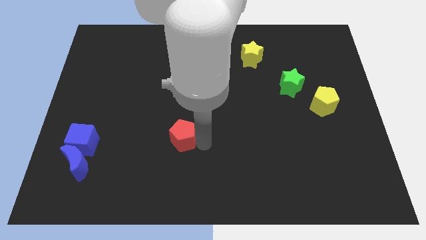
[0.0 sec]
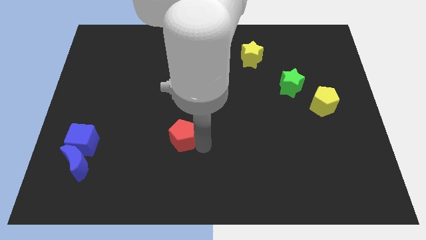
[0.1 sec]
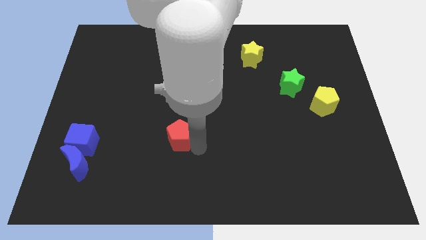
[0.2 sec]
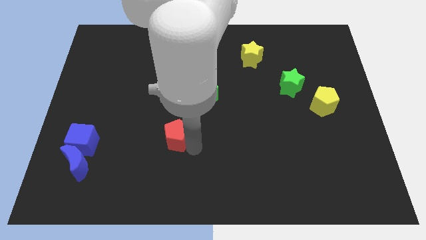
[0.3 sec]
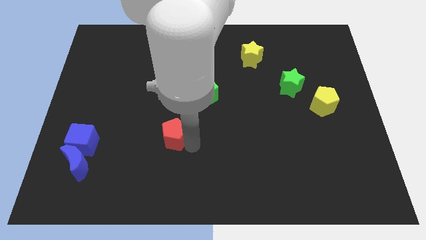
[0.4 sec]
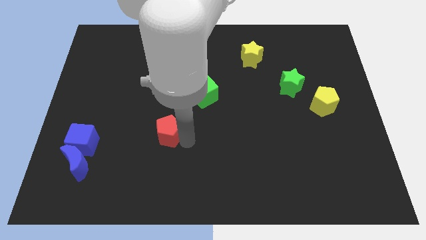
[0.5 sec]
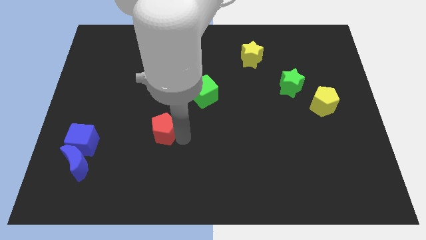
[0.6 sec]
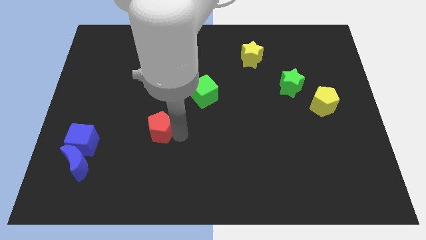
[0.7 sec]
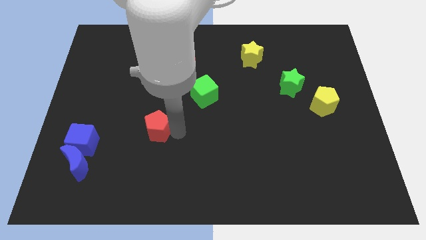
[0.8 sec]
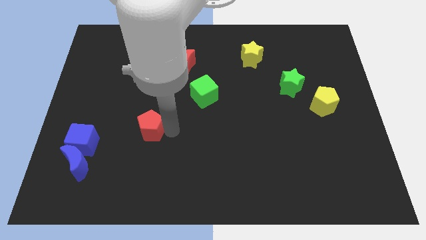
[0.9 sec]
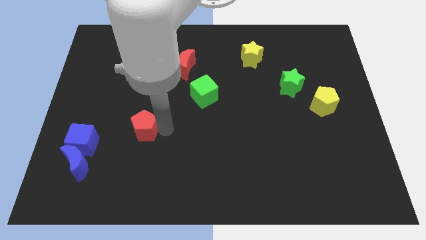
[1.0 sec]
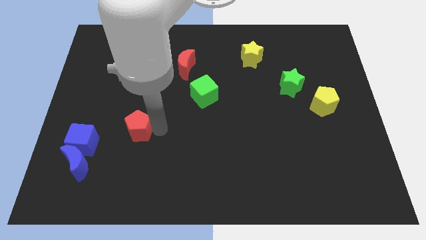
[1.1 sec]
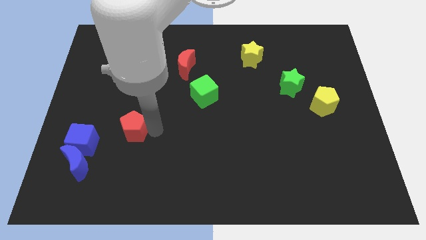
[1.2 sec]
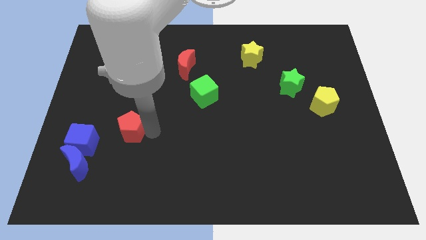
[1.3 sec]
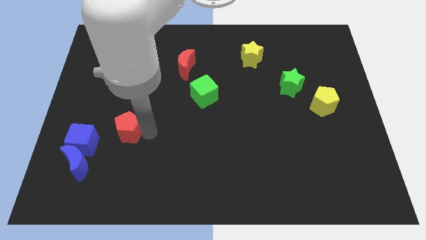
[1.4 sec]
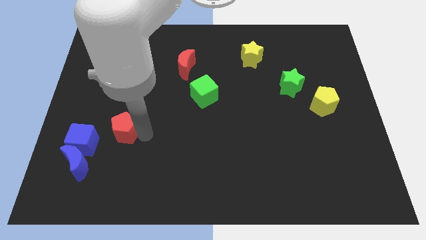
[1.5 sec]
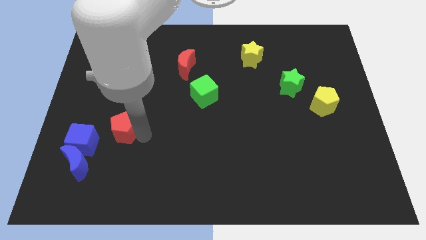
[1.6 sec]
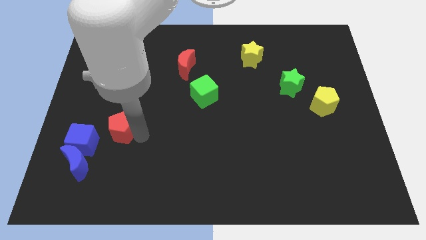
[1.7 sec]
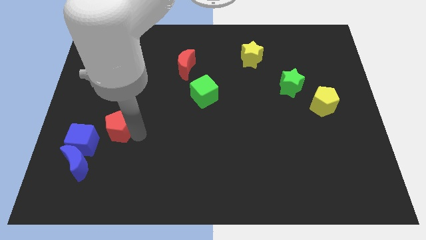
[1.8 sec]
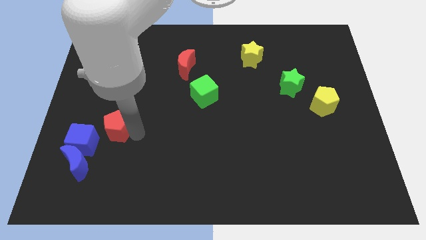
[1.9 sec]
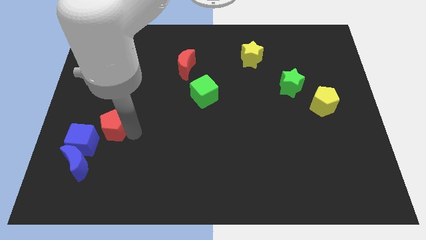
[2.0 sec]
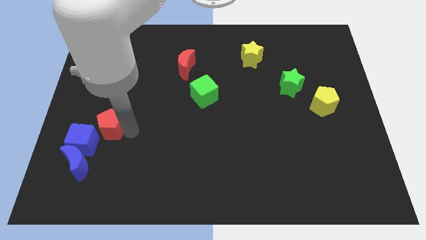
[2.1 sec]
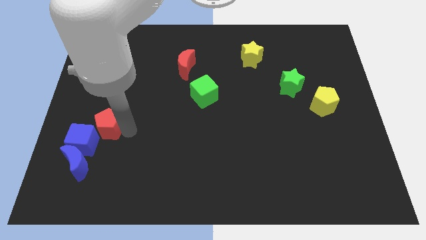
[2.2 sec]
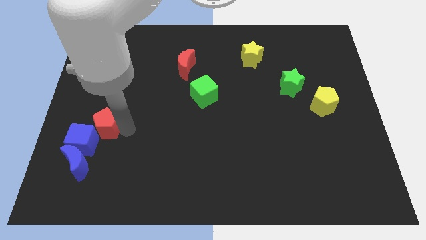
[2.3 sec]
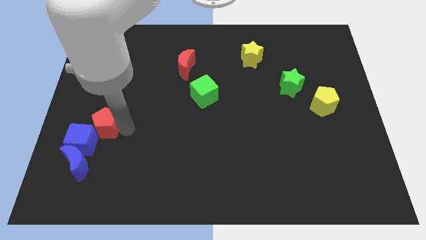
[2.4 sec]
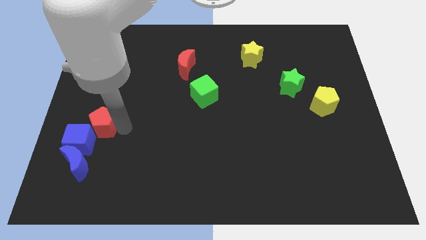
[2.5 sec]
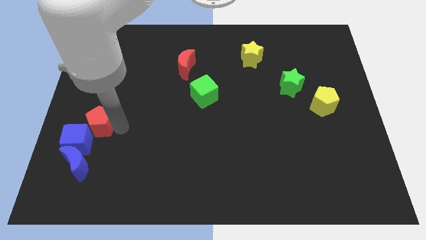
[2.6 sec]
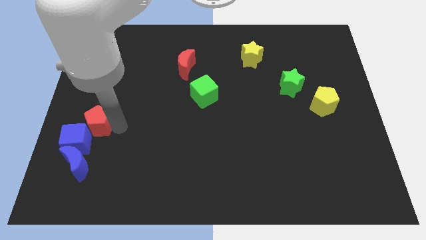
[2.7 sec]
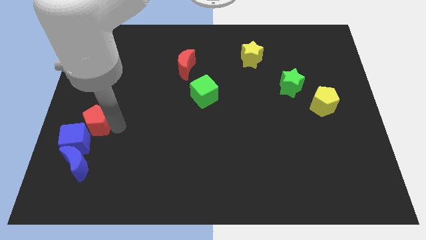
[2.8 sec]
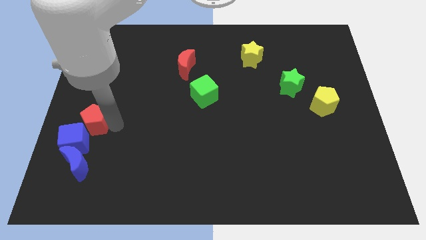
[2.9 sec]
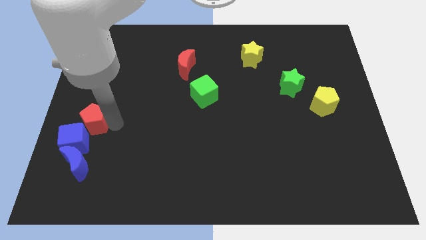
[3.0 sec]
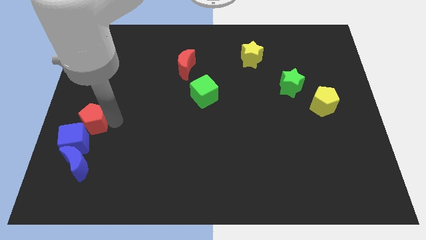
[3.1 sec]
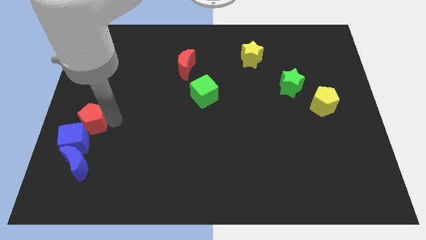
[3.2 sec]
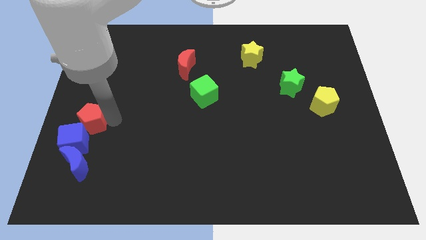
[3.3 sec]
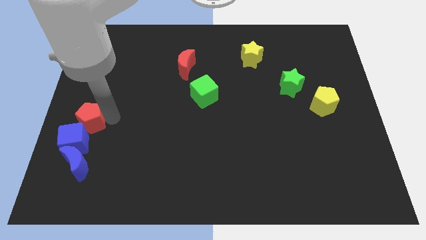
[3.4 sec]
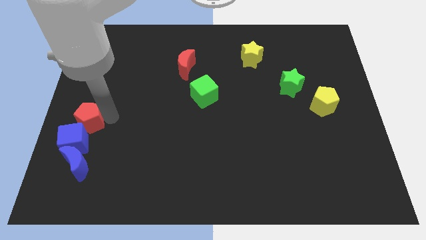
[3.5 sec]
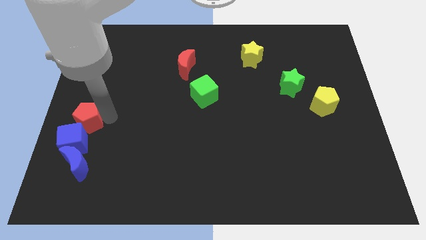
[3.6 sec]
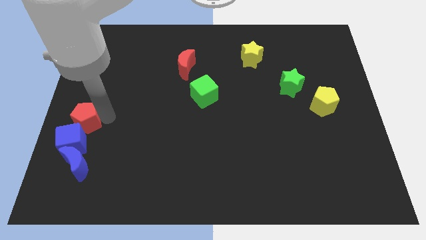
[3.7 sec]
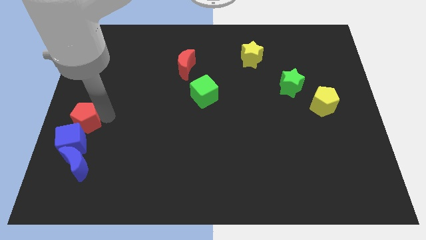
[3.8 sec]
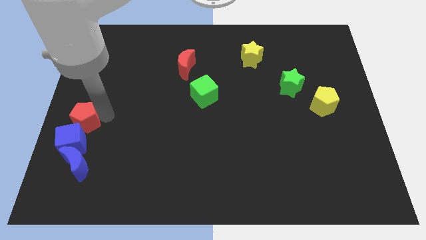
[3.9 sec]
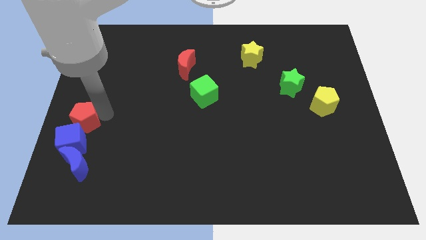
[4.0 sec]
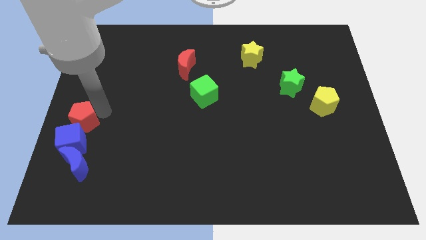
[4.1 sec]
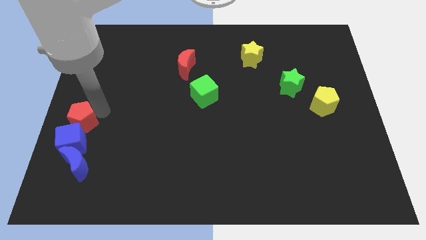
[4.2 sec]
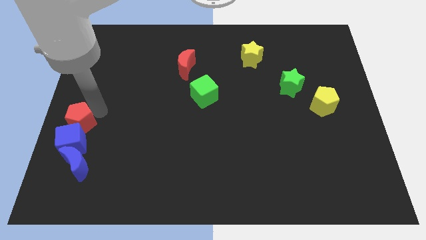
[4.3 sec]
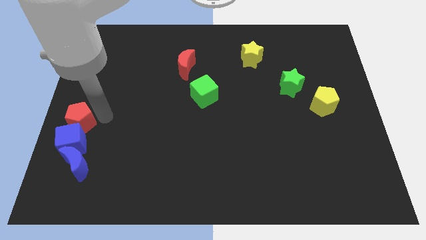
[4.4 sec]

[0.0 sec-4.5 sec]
push the red pentagon into the top side of the blue cube

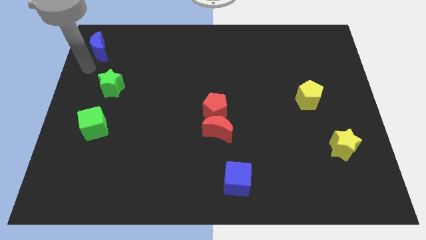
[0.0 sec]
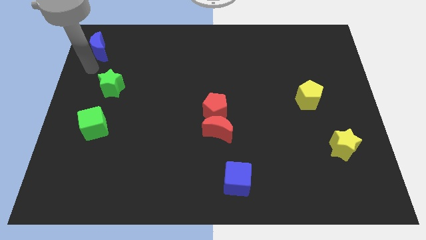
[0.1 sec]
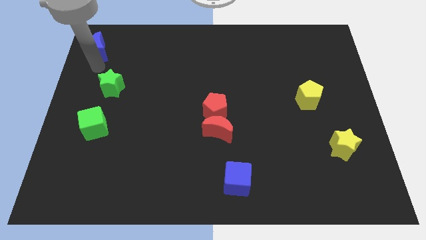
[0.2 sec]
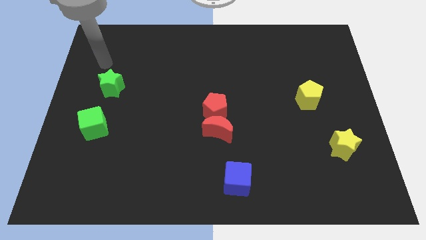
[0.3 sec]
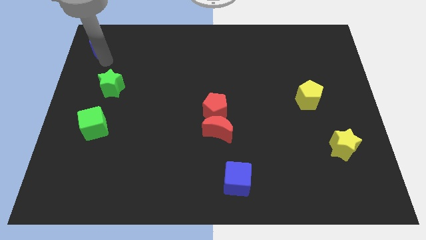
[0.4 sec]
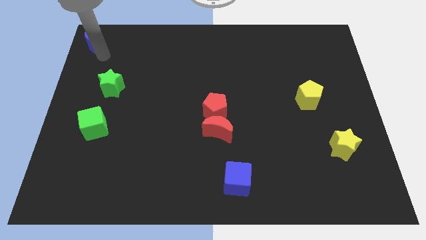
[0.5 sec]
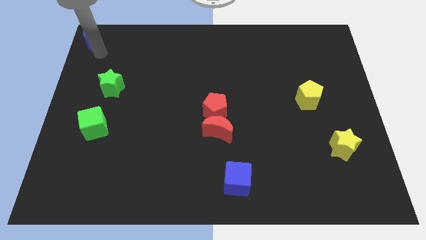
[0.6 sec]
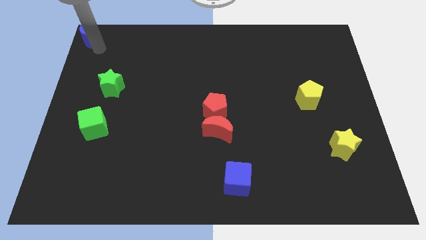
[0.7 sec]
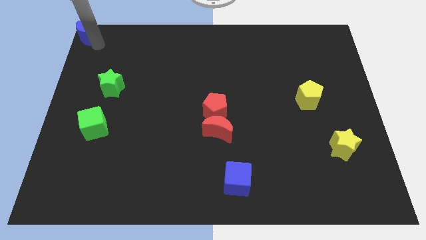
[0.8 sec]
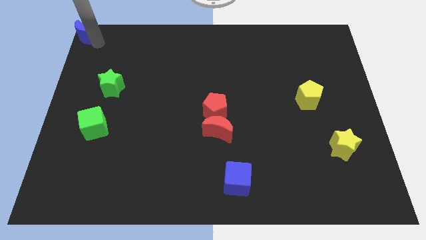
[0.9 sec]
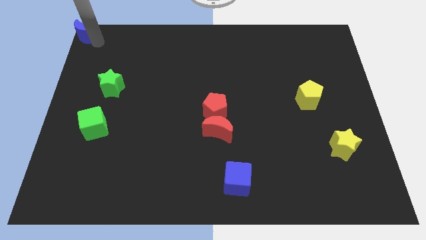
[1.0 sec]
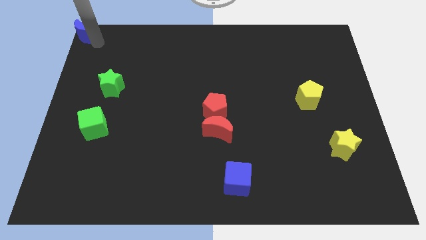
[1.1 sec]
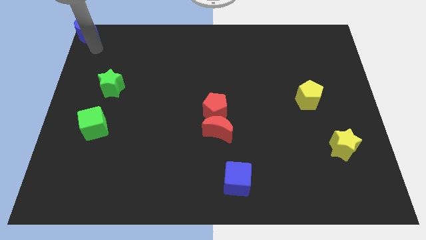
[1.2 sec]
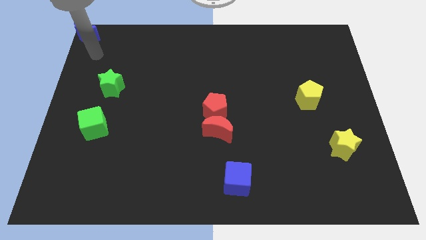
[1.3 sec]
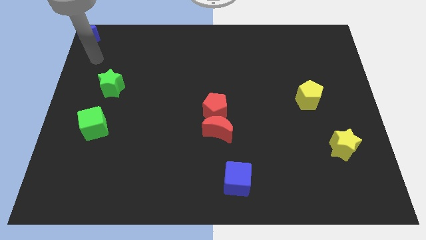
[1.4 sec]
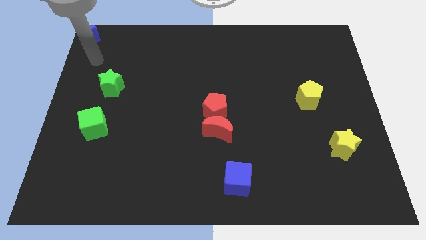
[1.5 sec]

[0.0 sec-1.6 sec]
place blue crescent at the top left corner of the board

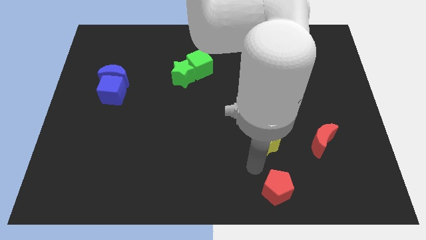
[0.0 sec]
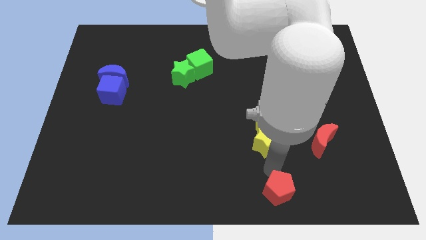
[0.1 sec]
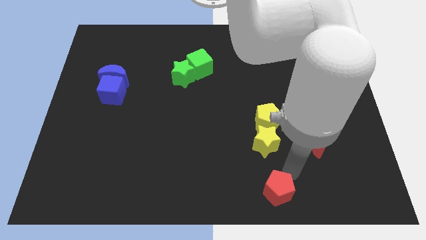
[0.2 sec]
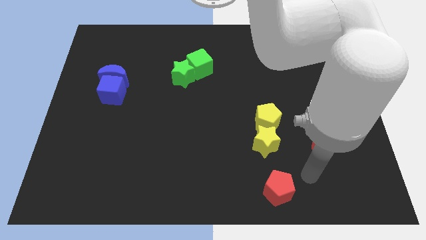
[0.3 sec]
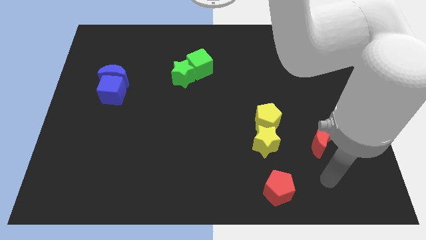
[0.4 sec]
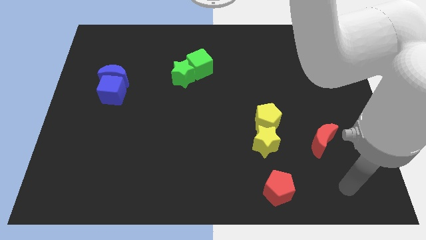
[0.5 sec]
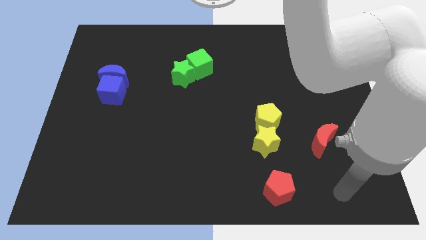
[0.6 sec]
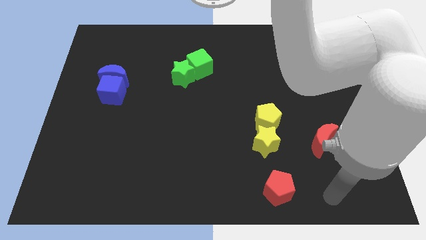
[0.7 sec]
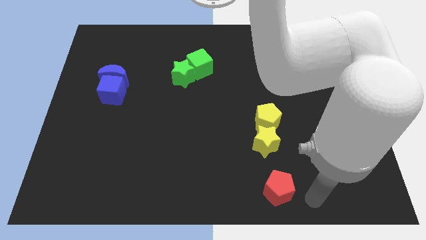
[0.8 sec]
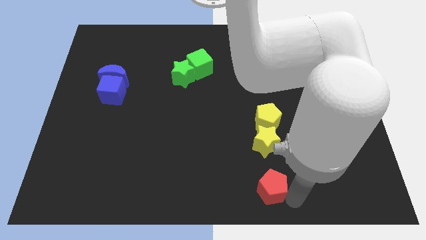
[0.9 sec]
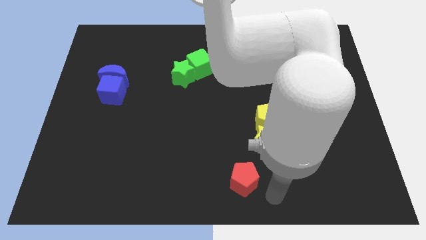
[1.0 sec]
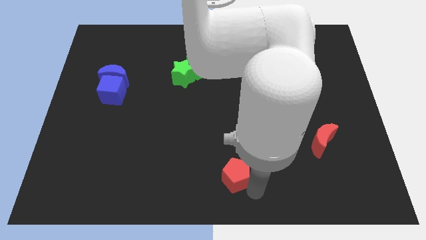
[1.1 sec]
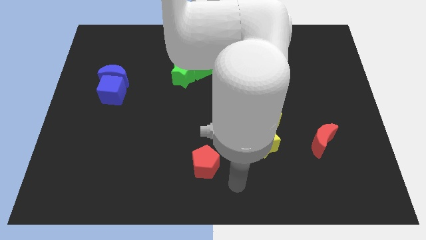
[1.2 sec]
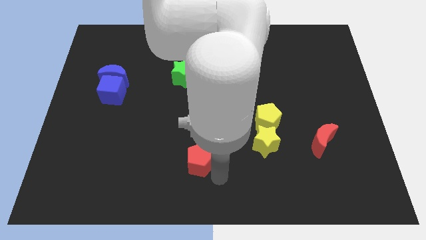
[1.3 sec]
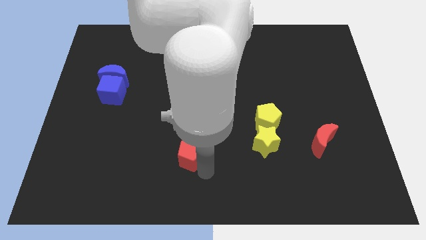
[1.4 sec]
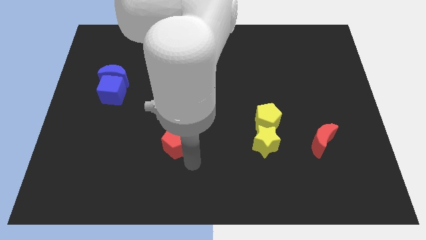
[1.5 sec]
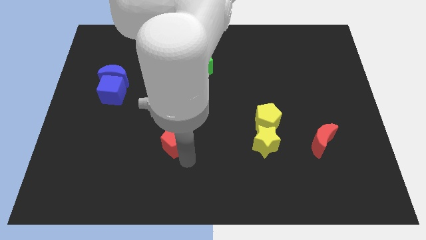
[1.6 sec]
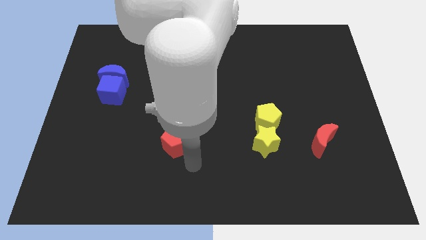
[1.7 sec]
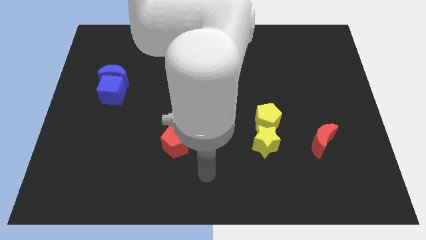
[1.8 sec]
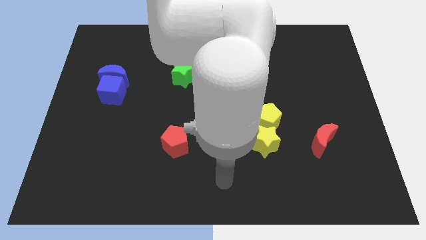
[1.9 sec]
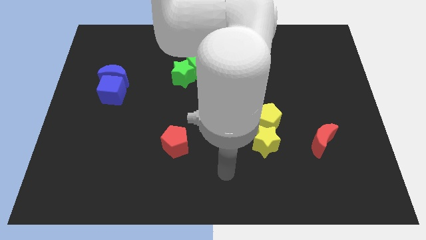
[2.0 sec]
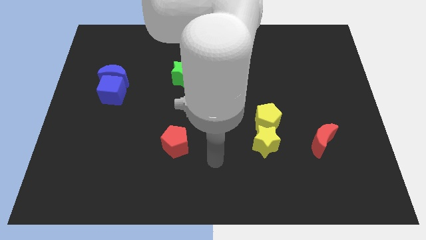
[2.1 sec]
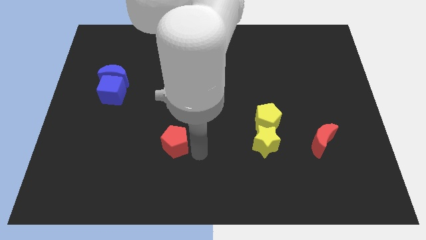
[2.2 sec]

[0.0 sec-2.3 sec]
move the red pentagon horizontally left to the yellow star

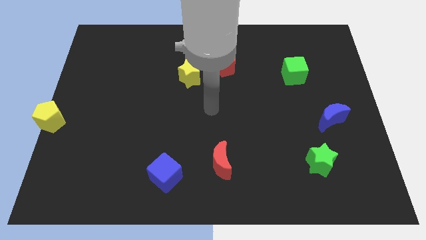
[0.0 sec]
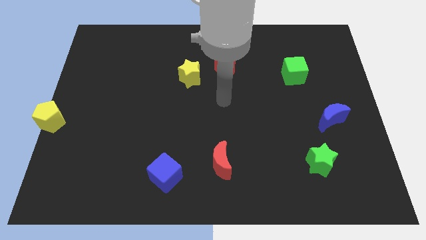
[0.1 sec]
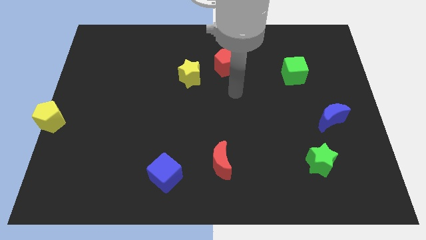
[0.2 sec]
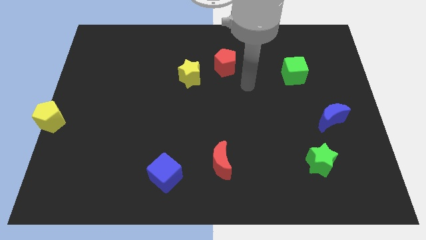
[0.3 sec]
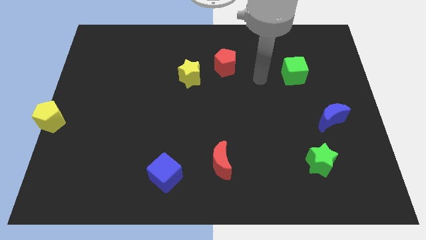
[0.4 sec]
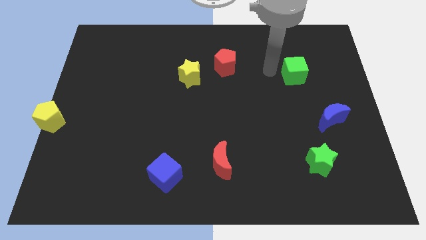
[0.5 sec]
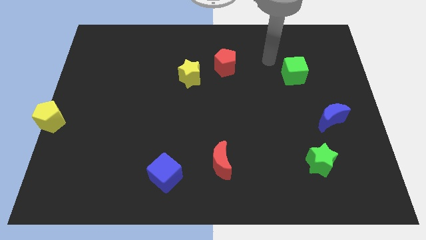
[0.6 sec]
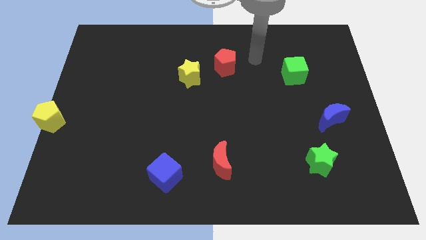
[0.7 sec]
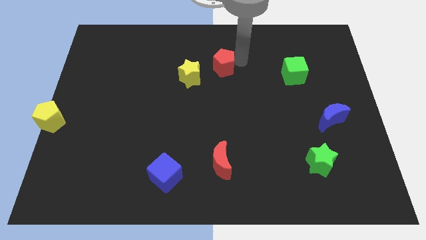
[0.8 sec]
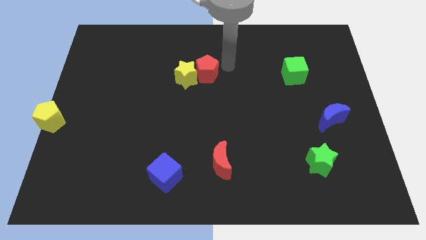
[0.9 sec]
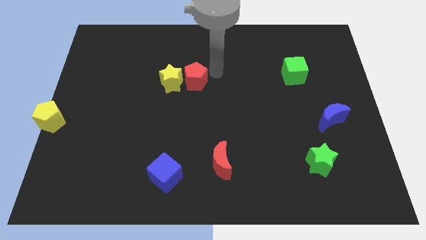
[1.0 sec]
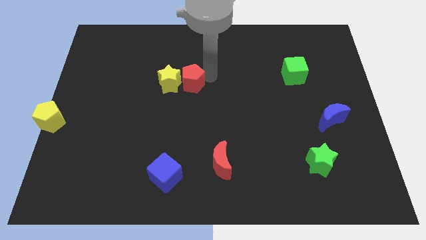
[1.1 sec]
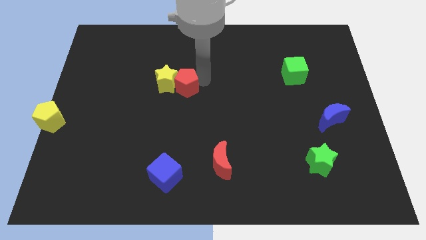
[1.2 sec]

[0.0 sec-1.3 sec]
push the red pentagon into the yellow star
